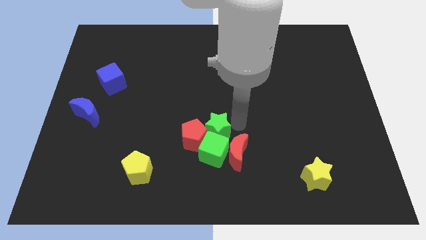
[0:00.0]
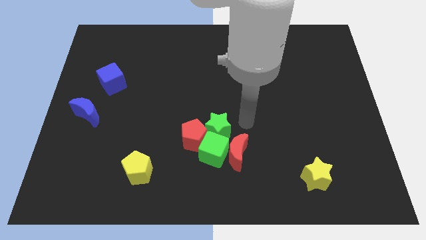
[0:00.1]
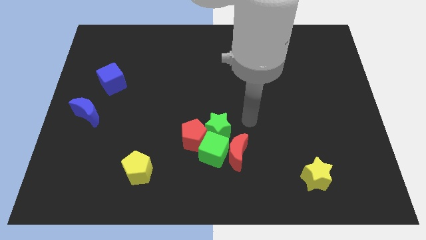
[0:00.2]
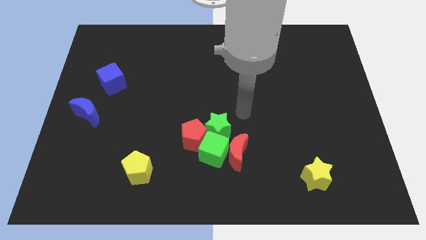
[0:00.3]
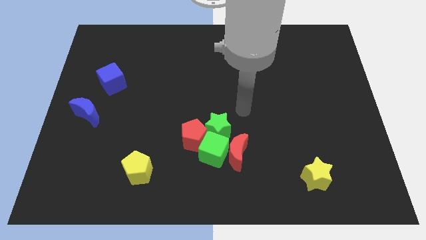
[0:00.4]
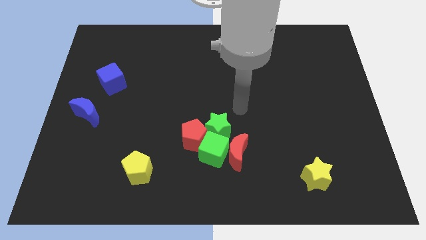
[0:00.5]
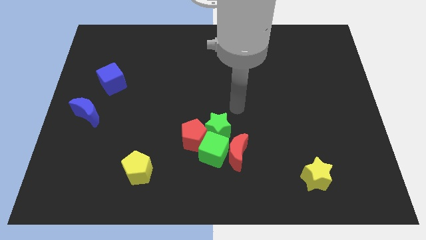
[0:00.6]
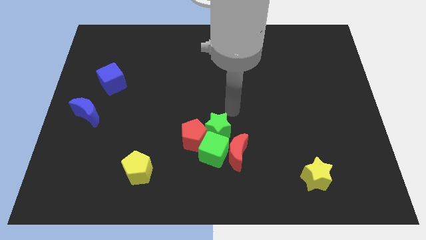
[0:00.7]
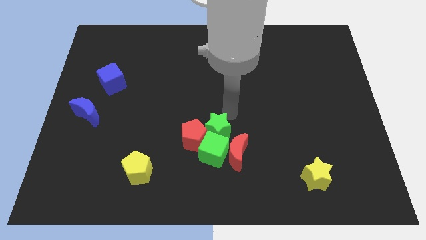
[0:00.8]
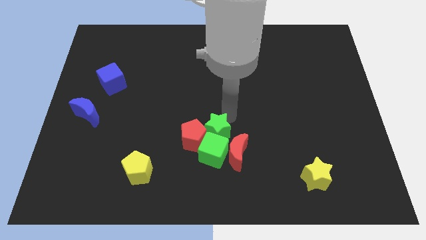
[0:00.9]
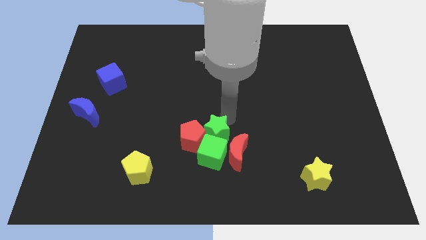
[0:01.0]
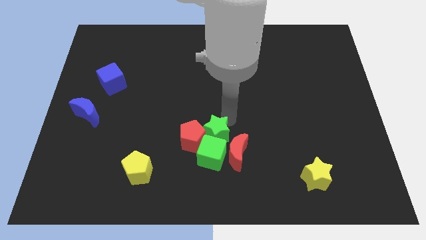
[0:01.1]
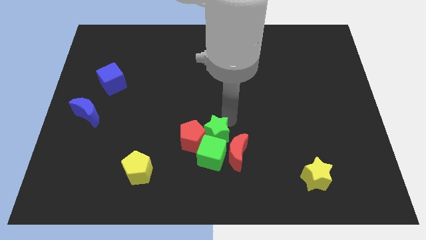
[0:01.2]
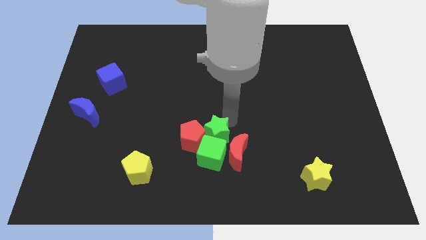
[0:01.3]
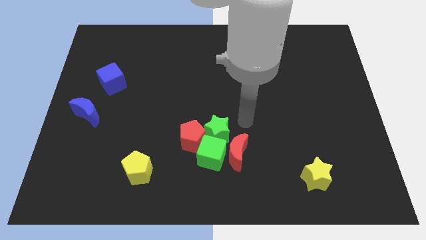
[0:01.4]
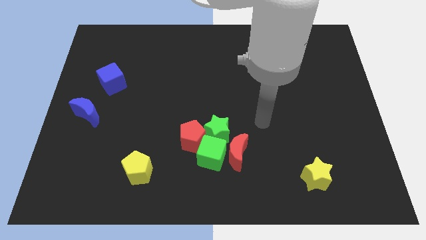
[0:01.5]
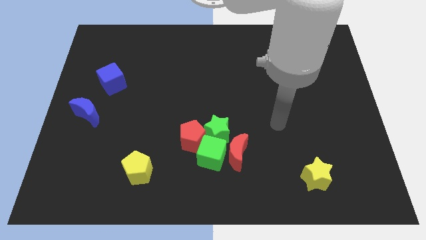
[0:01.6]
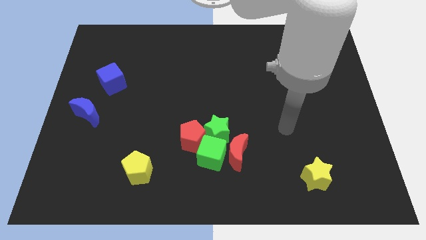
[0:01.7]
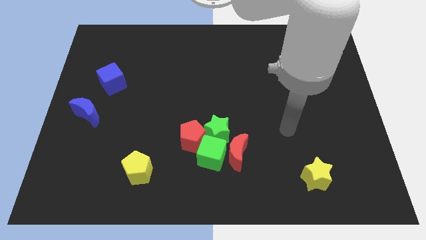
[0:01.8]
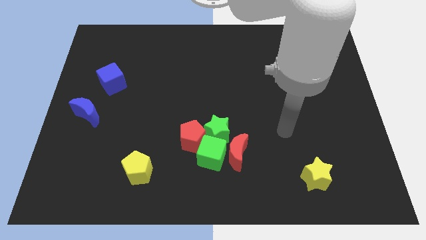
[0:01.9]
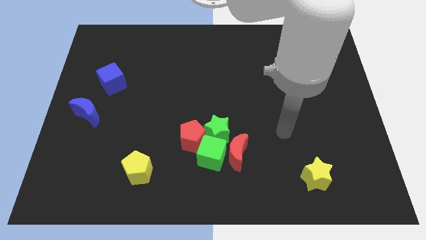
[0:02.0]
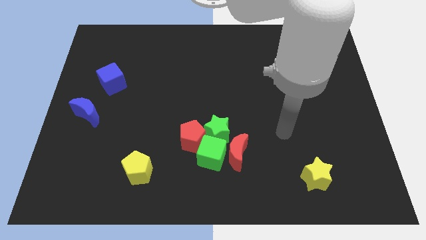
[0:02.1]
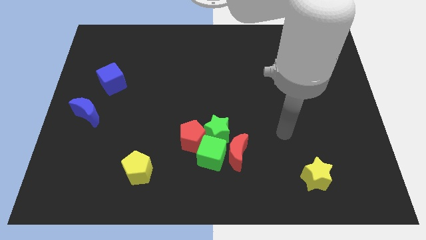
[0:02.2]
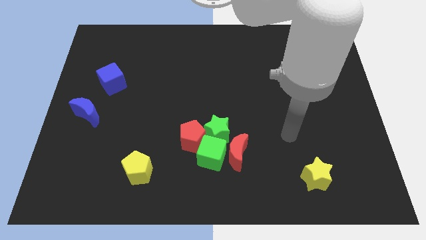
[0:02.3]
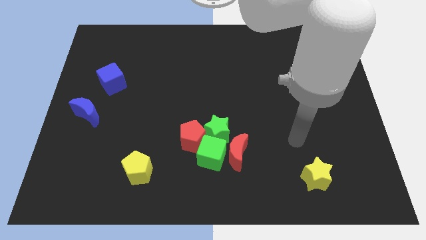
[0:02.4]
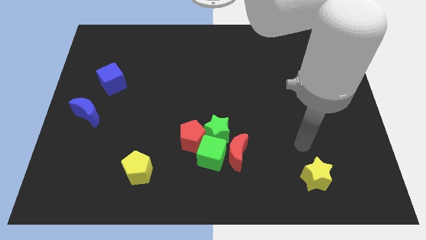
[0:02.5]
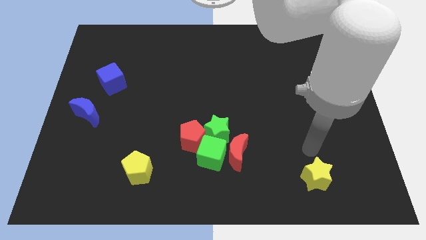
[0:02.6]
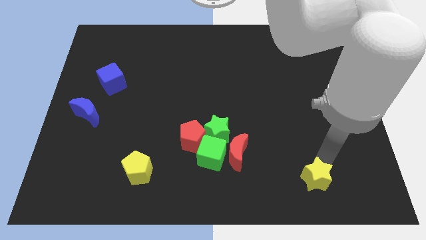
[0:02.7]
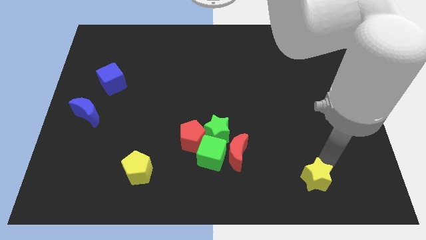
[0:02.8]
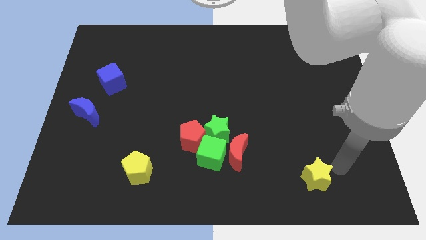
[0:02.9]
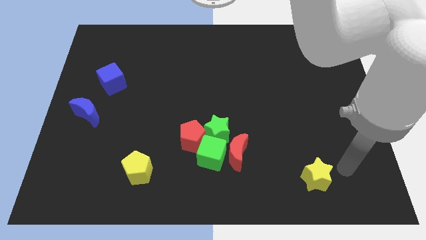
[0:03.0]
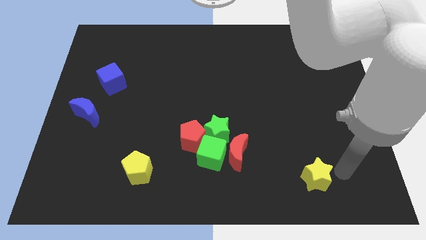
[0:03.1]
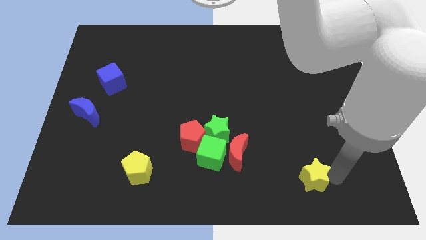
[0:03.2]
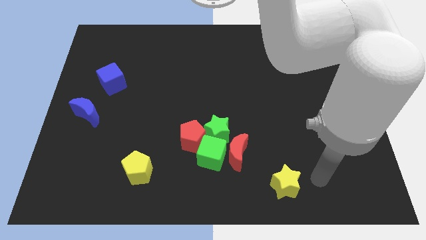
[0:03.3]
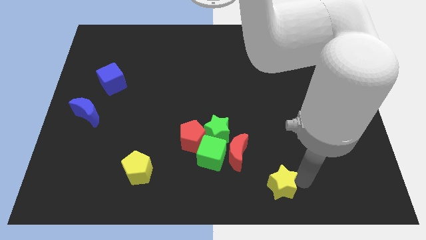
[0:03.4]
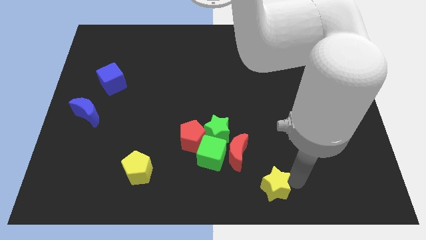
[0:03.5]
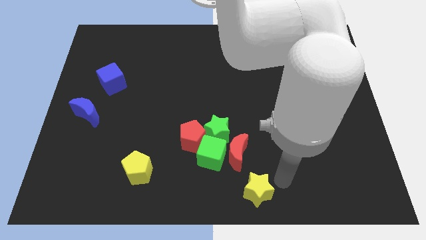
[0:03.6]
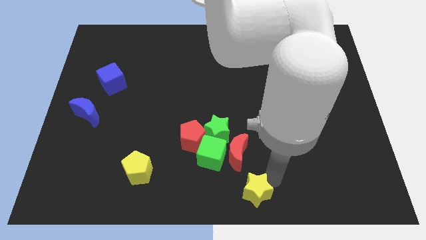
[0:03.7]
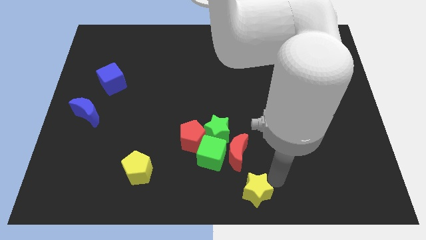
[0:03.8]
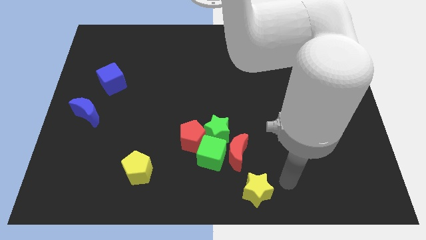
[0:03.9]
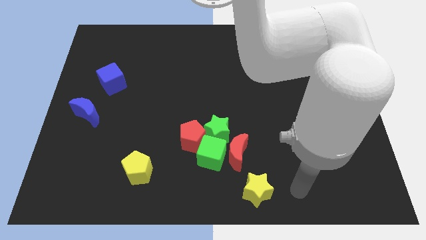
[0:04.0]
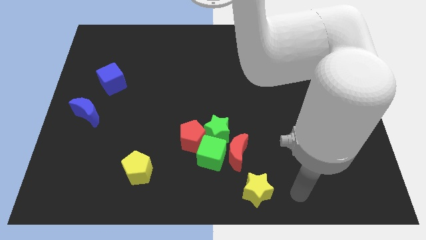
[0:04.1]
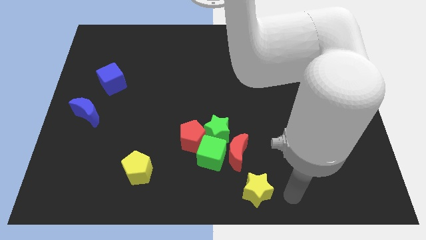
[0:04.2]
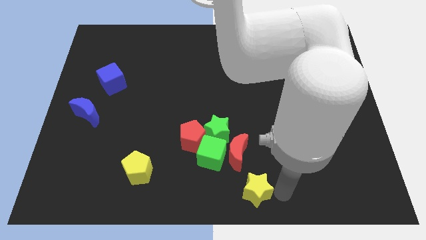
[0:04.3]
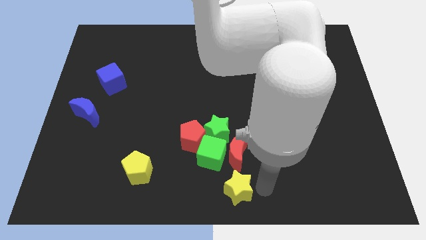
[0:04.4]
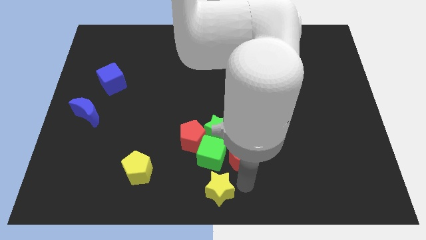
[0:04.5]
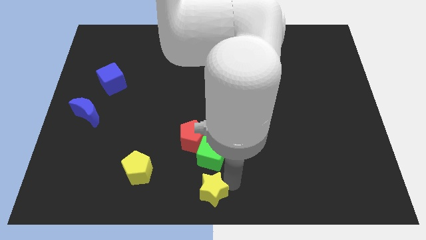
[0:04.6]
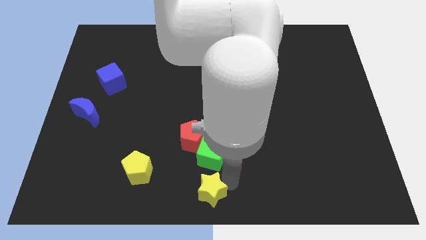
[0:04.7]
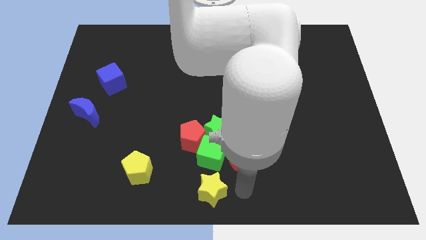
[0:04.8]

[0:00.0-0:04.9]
drag the yellow star to the bottom center

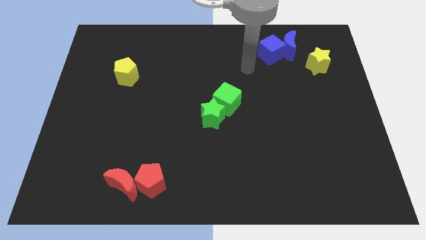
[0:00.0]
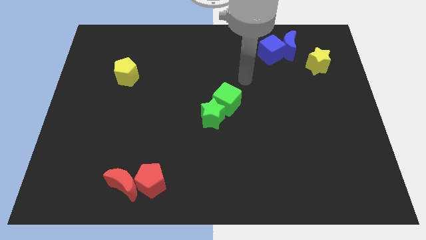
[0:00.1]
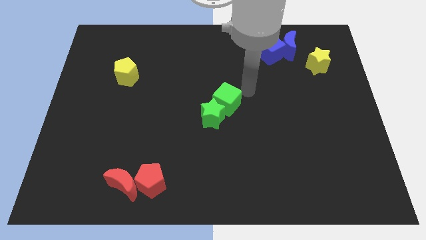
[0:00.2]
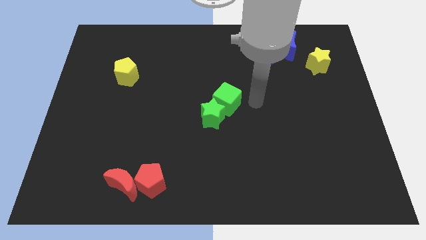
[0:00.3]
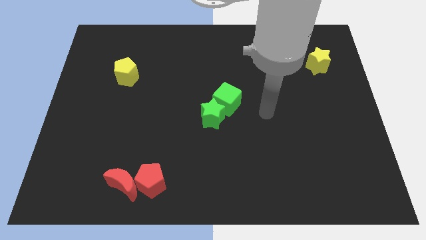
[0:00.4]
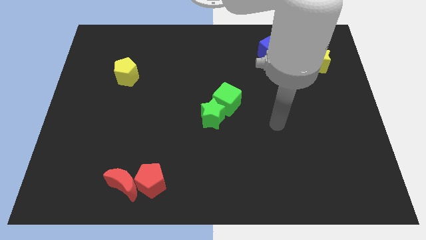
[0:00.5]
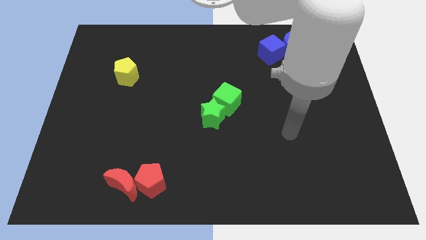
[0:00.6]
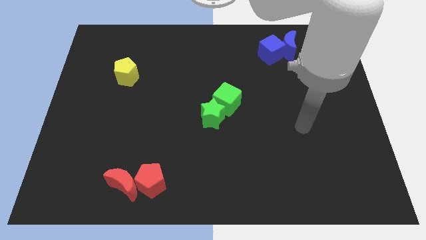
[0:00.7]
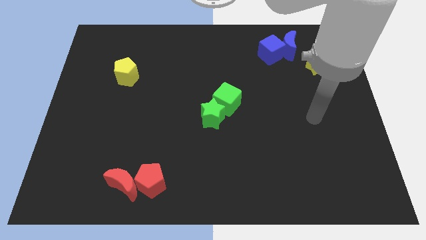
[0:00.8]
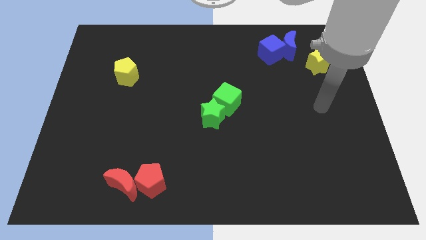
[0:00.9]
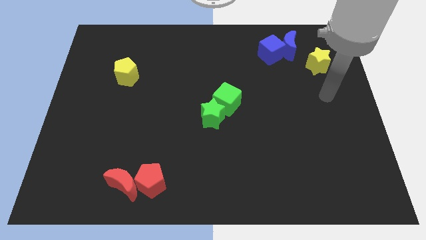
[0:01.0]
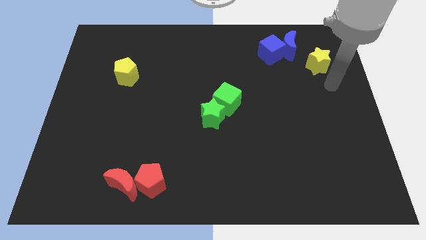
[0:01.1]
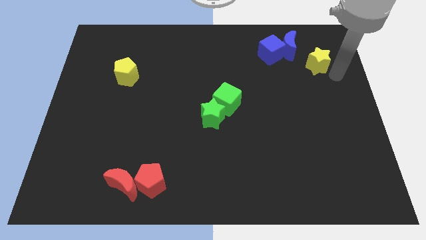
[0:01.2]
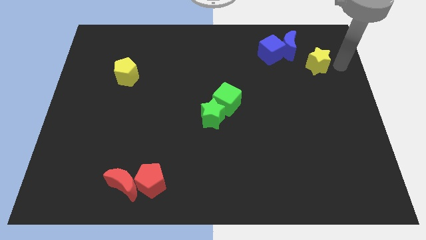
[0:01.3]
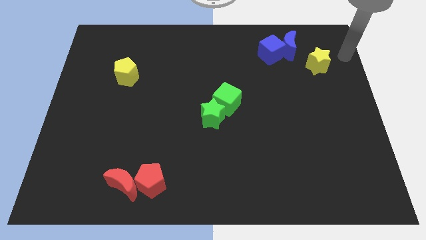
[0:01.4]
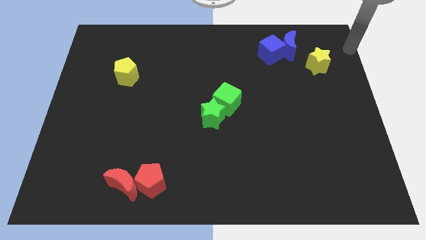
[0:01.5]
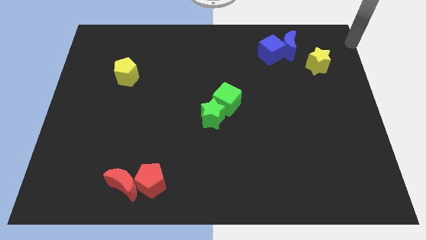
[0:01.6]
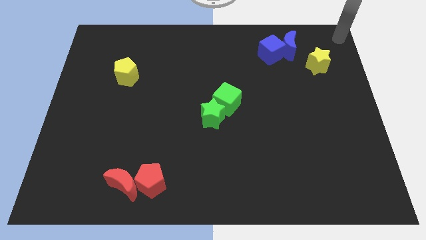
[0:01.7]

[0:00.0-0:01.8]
point your arm at the top right corner of the board

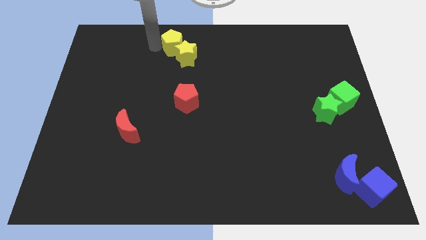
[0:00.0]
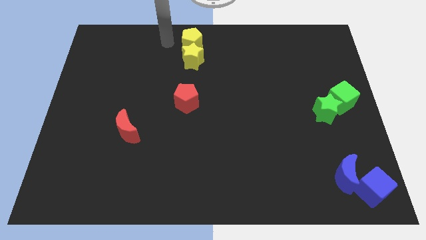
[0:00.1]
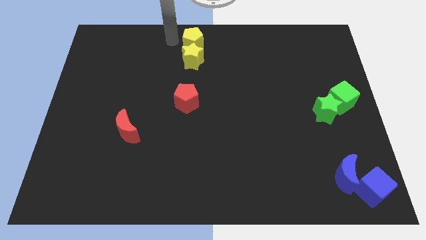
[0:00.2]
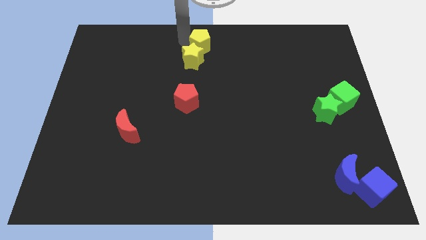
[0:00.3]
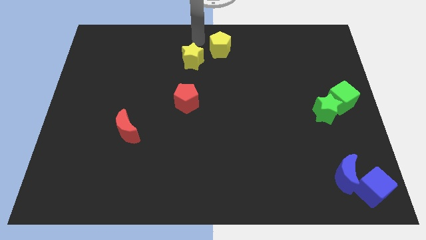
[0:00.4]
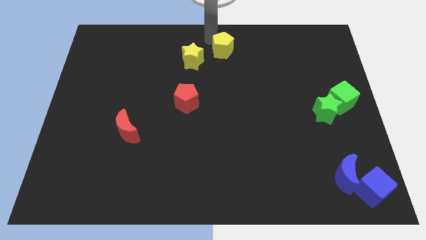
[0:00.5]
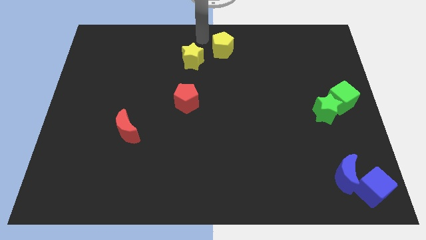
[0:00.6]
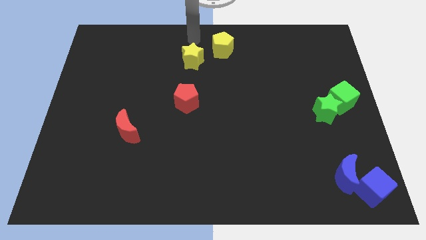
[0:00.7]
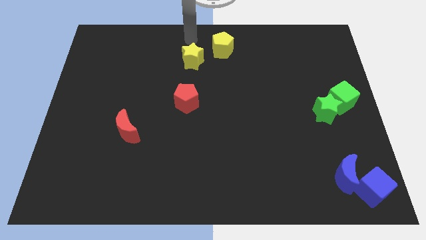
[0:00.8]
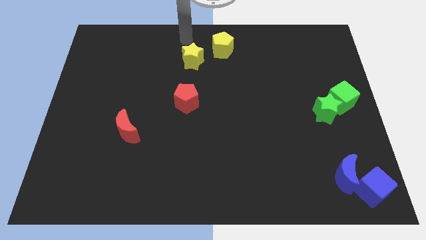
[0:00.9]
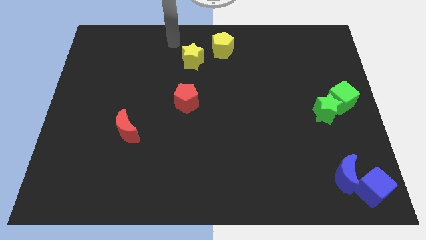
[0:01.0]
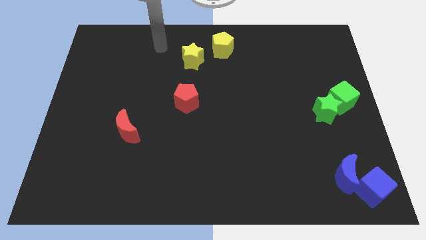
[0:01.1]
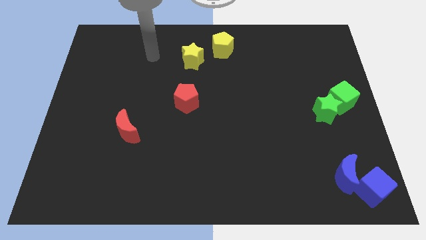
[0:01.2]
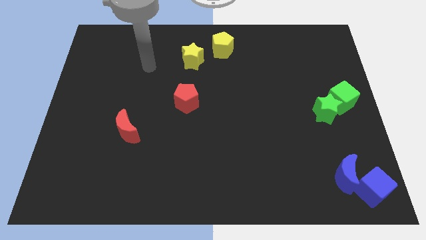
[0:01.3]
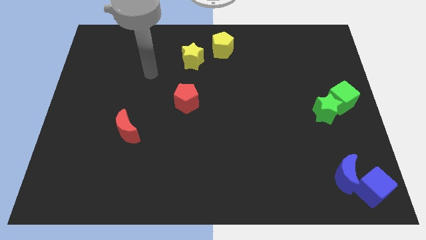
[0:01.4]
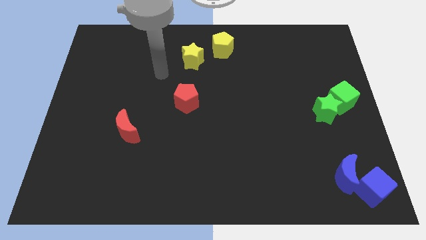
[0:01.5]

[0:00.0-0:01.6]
move the yellow pentagon to the top right of the yellow star

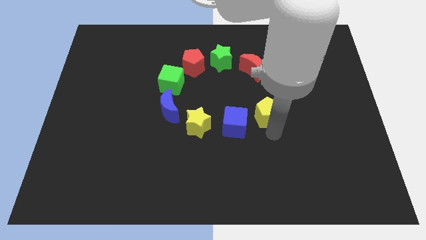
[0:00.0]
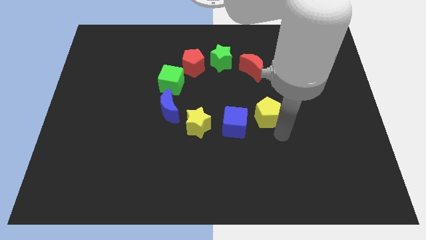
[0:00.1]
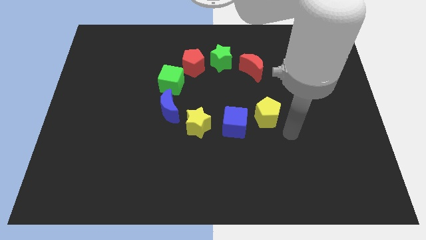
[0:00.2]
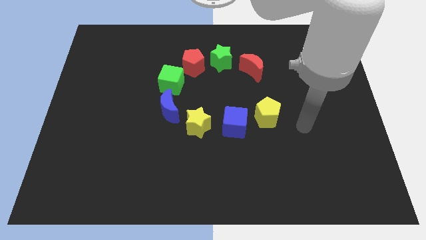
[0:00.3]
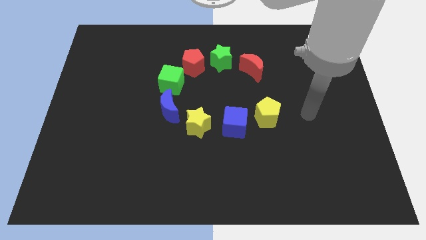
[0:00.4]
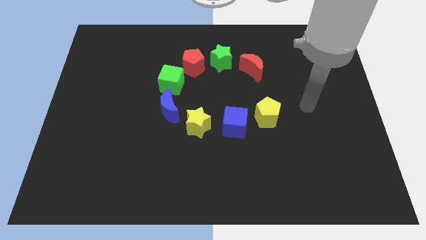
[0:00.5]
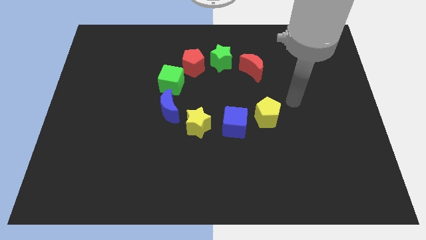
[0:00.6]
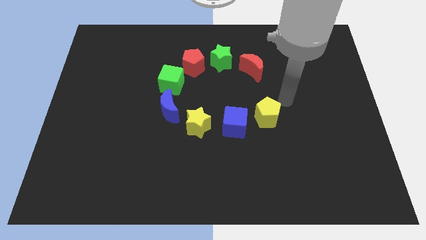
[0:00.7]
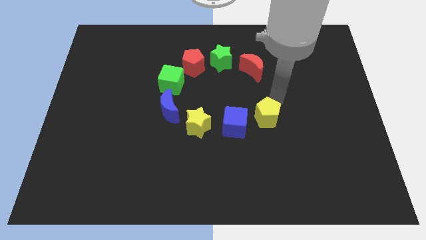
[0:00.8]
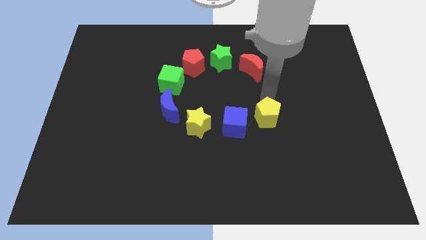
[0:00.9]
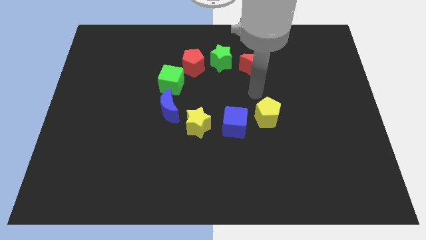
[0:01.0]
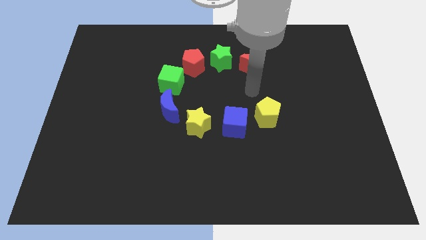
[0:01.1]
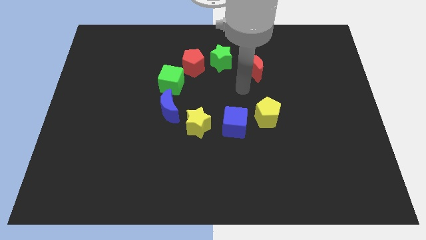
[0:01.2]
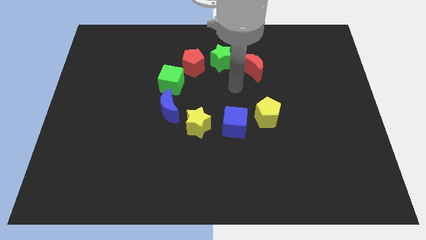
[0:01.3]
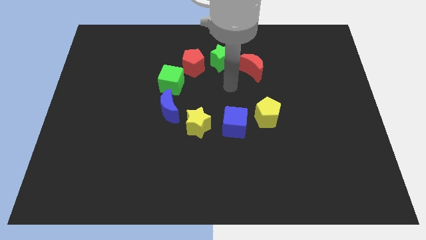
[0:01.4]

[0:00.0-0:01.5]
move your arm away from the yellow pentagon
